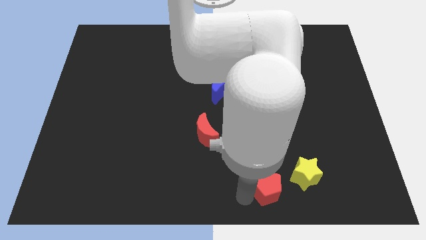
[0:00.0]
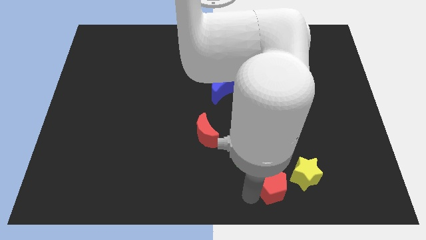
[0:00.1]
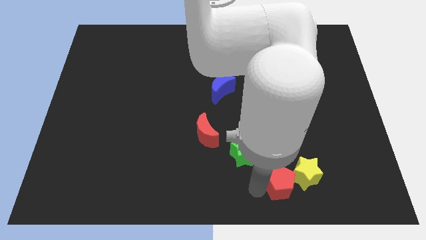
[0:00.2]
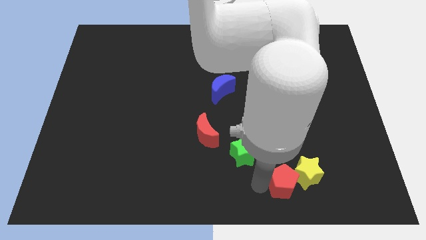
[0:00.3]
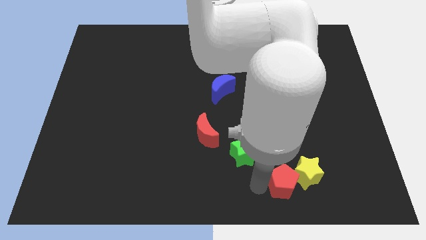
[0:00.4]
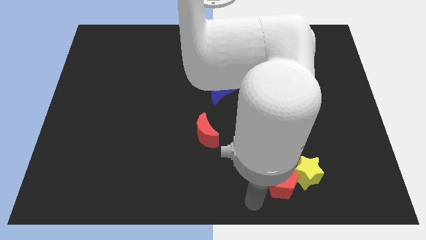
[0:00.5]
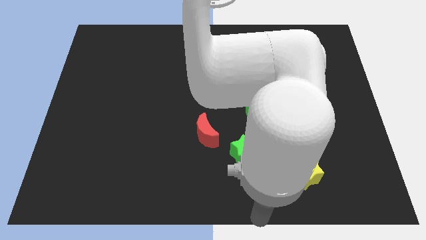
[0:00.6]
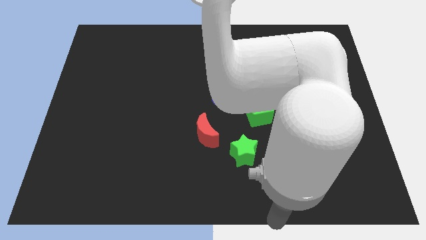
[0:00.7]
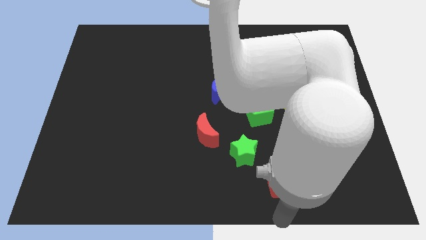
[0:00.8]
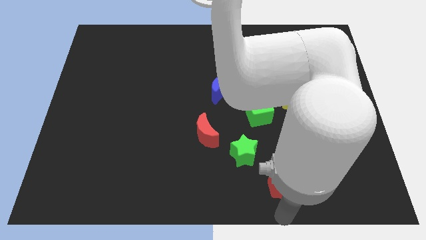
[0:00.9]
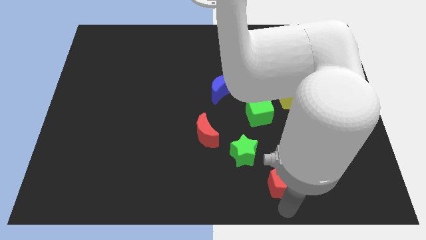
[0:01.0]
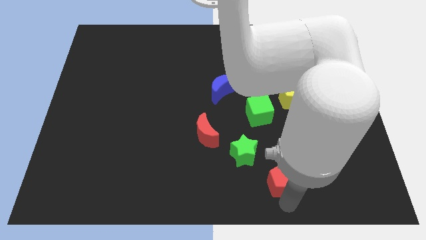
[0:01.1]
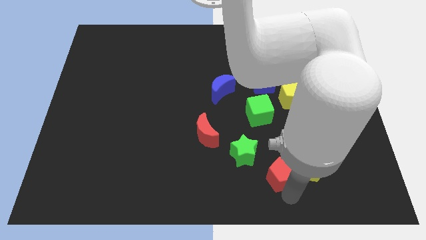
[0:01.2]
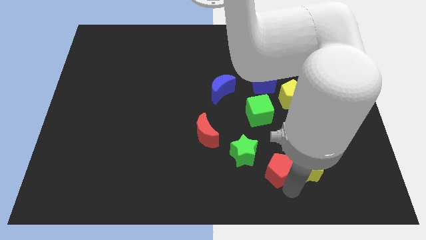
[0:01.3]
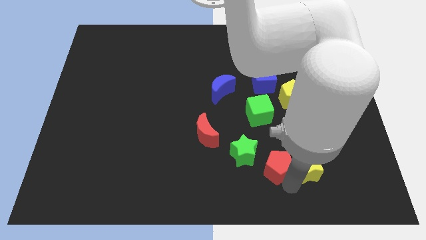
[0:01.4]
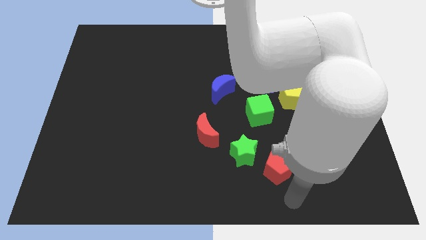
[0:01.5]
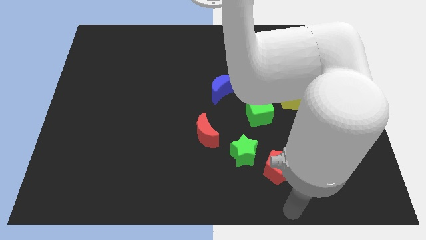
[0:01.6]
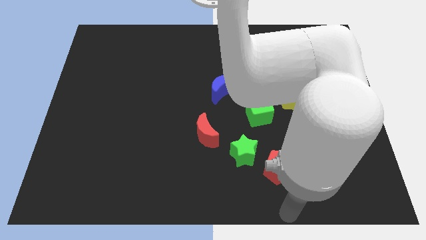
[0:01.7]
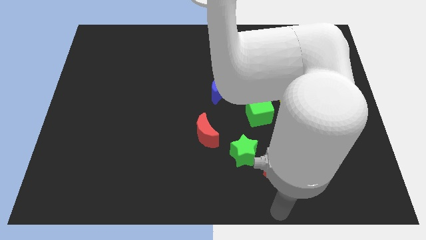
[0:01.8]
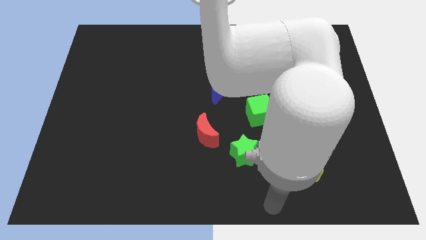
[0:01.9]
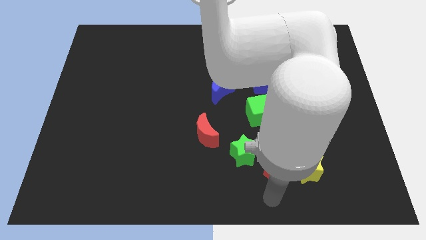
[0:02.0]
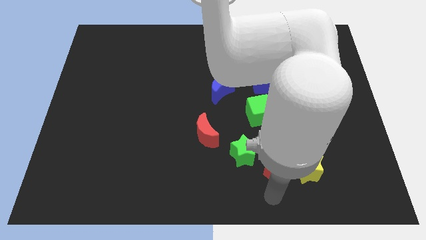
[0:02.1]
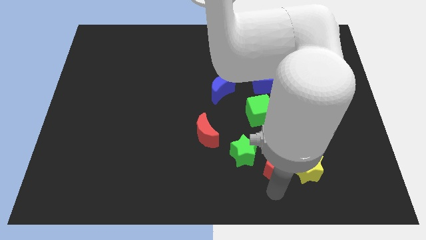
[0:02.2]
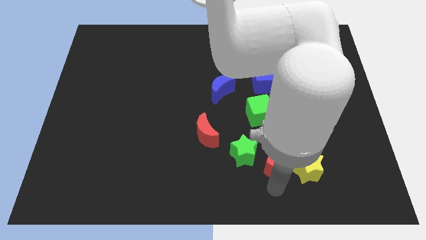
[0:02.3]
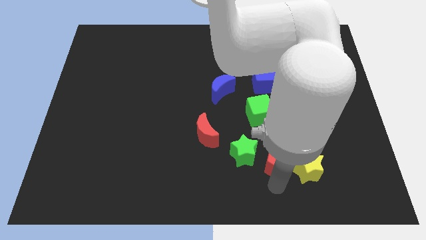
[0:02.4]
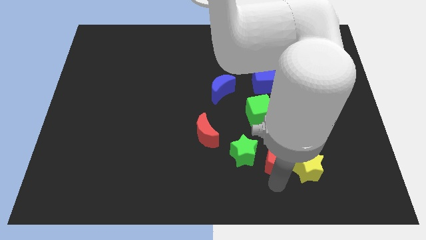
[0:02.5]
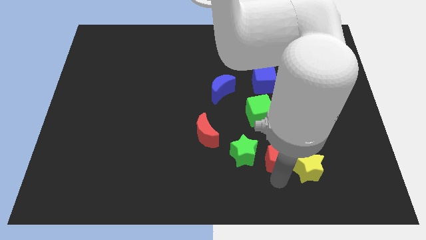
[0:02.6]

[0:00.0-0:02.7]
slide the red pentagon into the yellow star

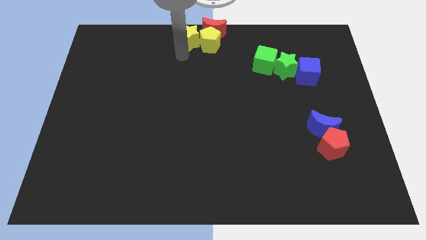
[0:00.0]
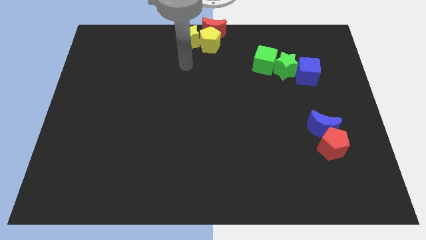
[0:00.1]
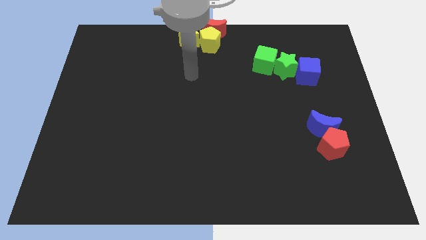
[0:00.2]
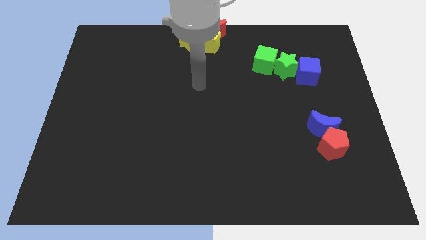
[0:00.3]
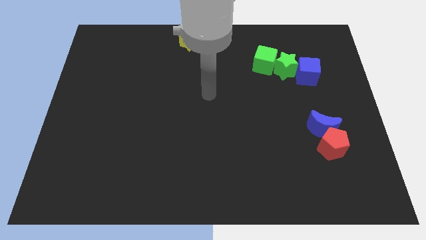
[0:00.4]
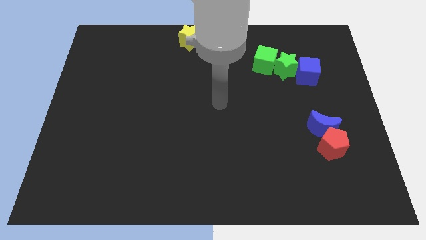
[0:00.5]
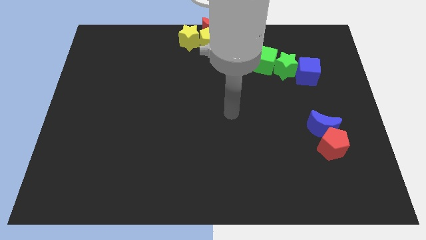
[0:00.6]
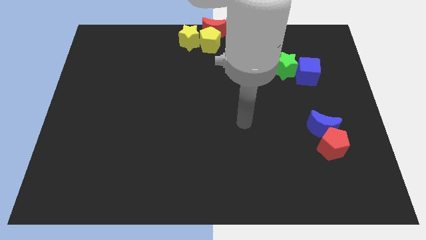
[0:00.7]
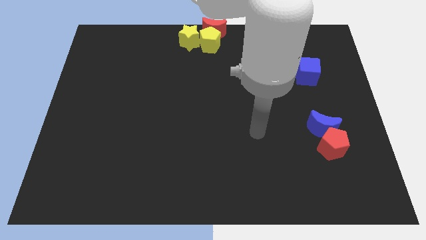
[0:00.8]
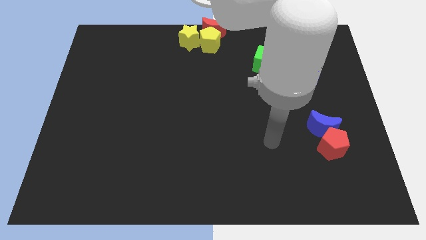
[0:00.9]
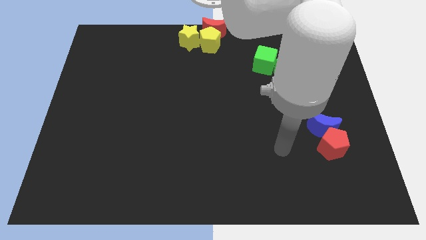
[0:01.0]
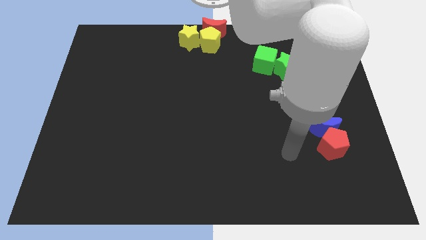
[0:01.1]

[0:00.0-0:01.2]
move your hand towards the bottom right

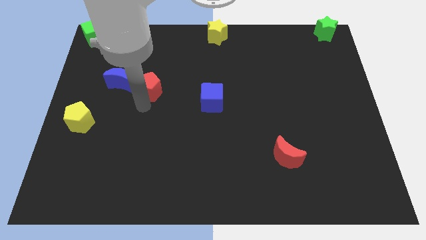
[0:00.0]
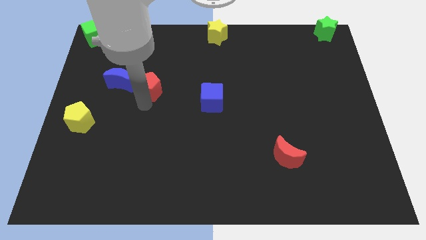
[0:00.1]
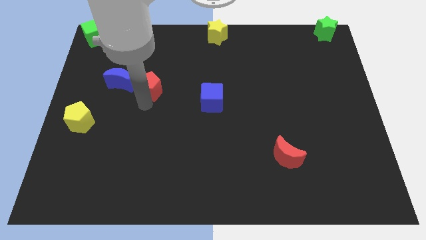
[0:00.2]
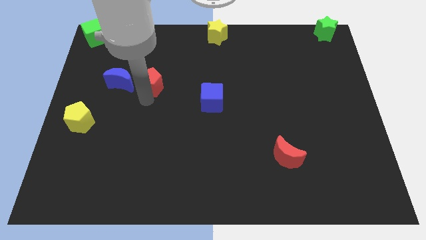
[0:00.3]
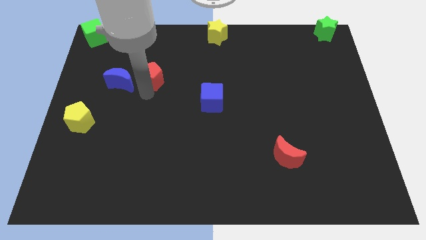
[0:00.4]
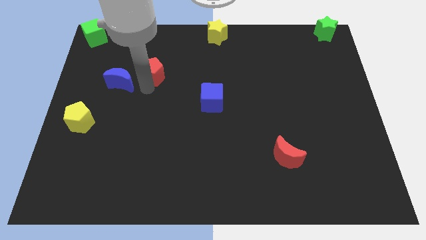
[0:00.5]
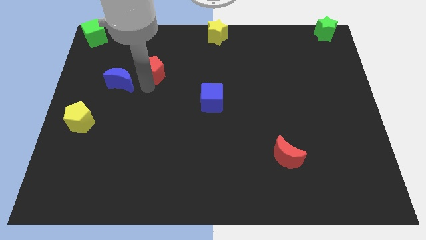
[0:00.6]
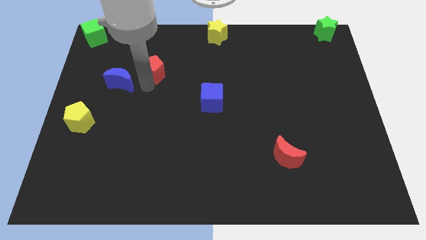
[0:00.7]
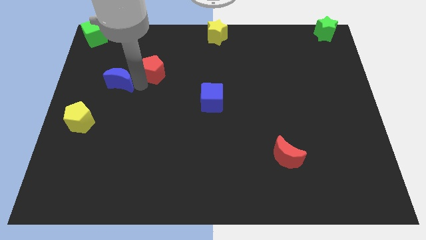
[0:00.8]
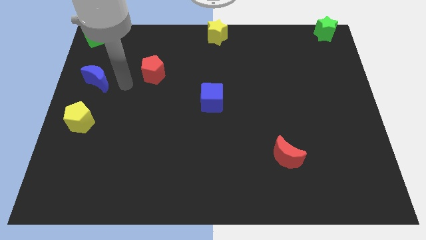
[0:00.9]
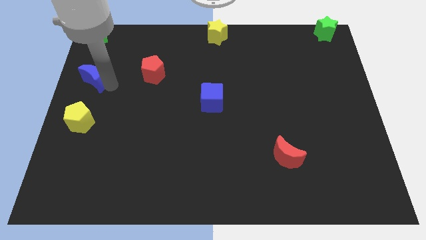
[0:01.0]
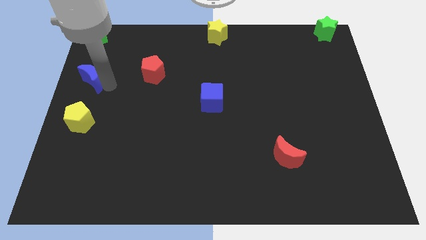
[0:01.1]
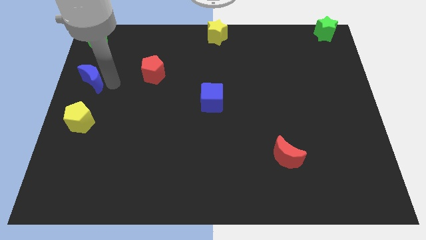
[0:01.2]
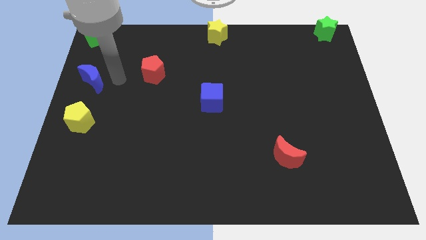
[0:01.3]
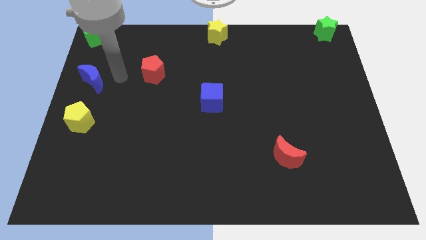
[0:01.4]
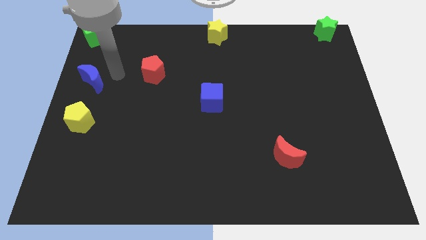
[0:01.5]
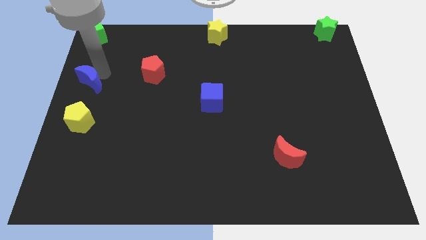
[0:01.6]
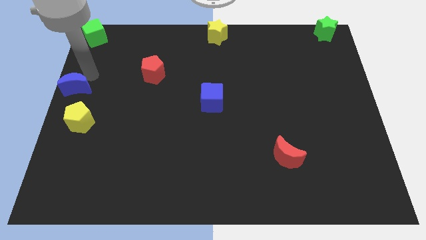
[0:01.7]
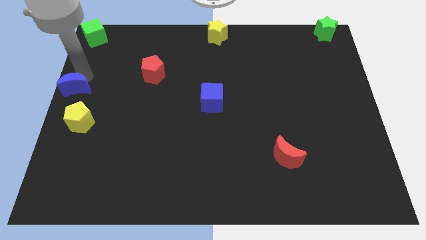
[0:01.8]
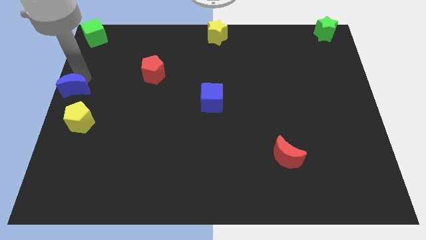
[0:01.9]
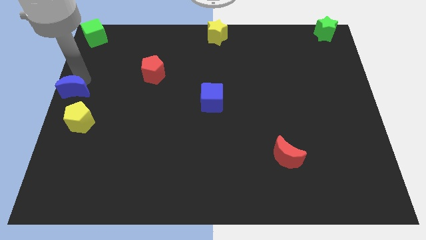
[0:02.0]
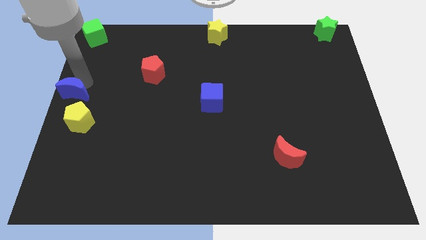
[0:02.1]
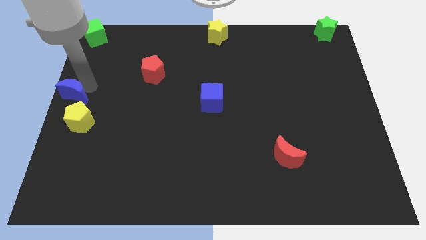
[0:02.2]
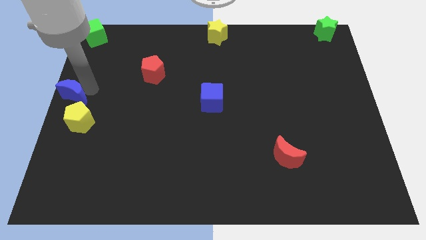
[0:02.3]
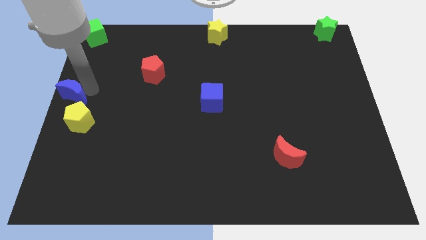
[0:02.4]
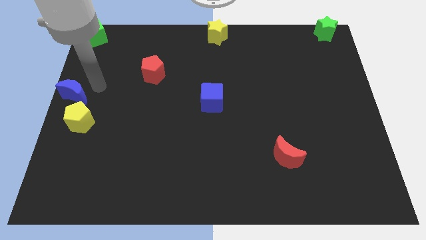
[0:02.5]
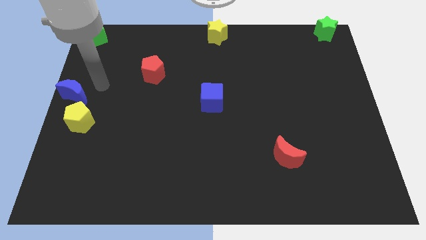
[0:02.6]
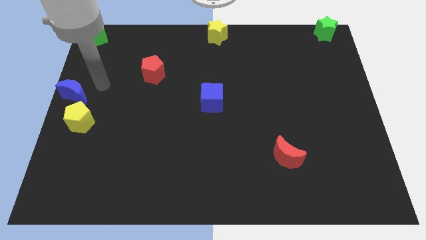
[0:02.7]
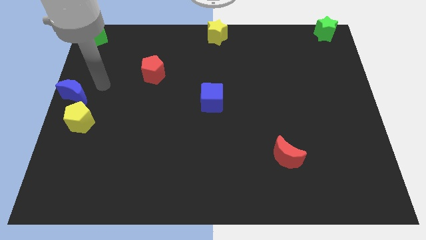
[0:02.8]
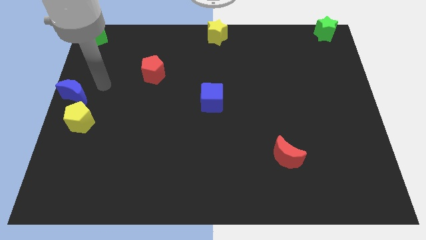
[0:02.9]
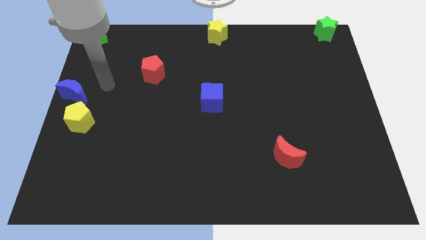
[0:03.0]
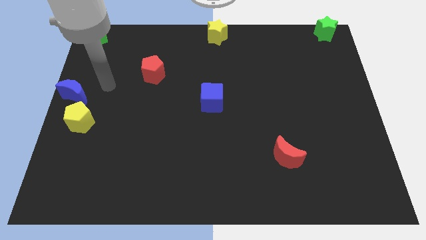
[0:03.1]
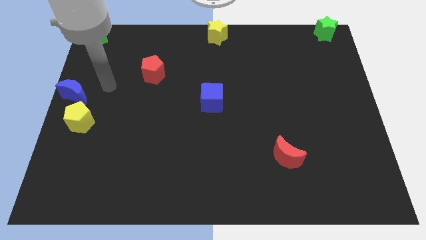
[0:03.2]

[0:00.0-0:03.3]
place the blue moon on top of yellow pentagon

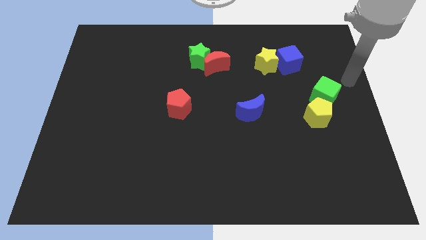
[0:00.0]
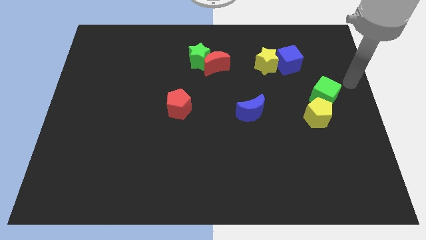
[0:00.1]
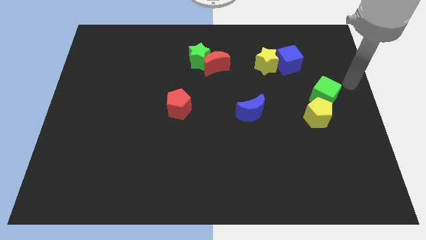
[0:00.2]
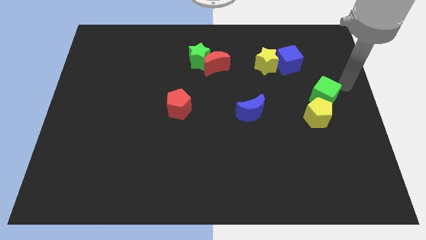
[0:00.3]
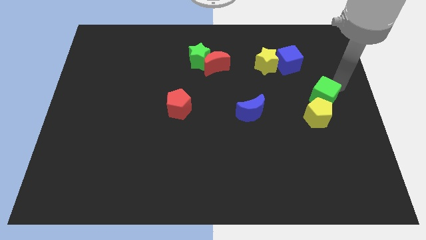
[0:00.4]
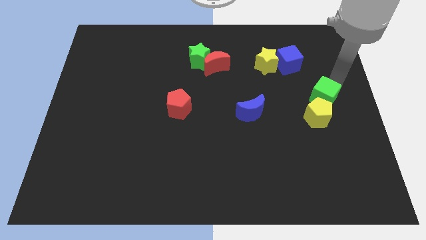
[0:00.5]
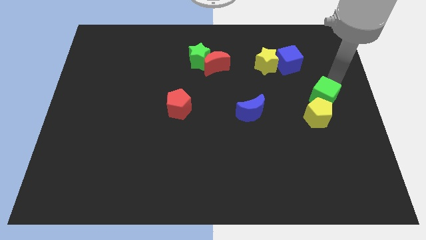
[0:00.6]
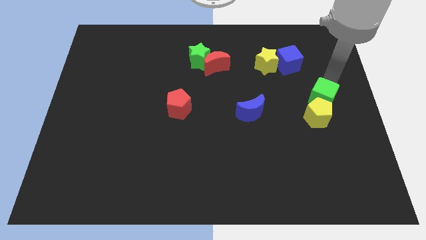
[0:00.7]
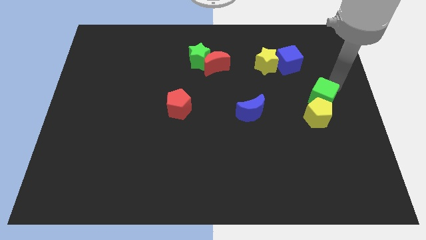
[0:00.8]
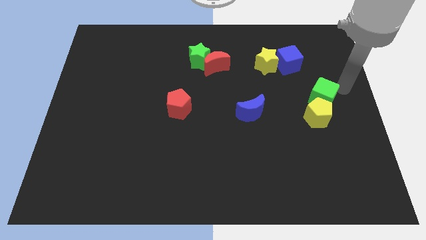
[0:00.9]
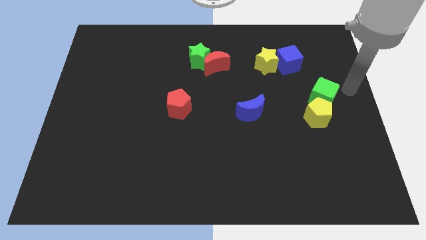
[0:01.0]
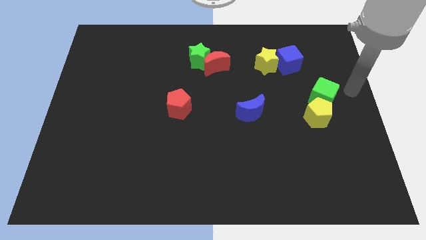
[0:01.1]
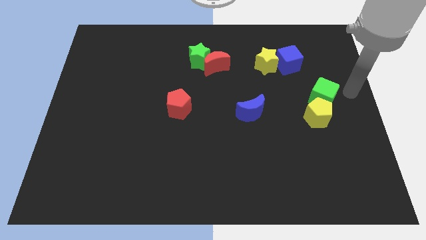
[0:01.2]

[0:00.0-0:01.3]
slightly push green cube towards yellow pentagon

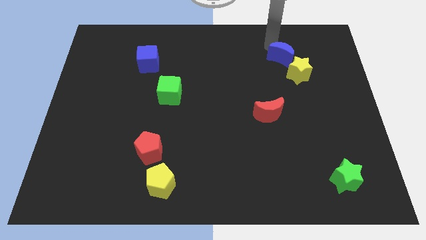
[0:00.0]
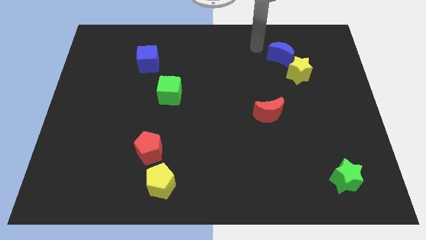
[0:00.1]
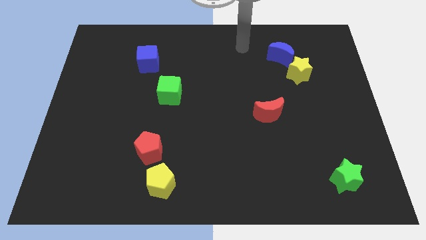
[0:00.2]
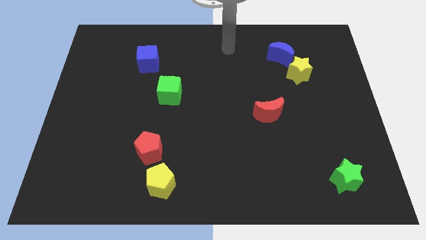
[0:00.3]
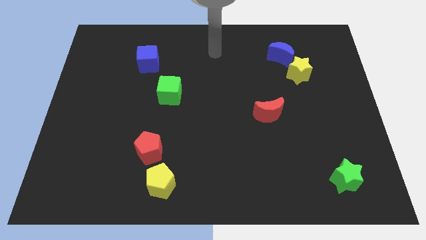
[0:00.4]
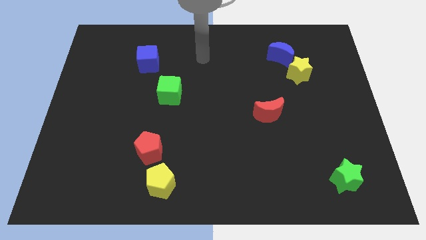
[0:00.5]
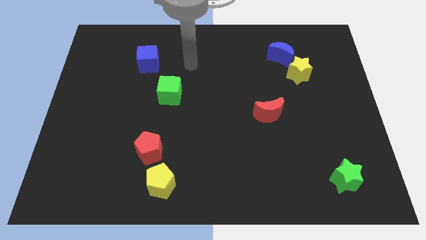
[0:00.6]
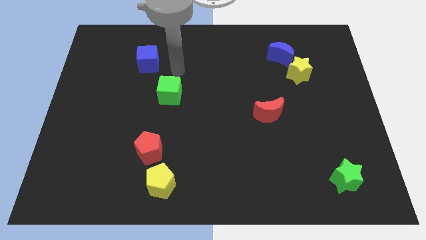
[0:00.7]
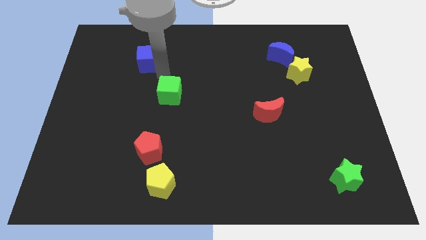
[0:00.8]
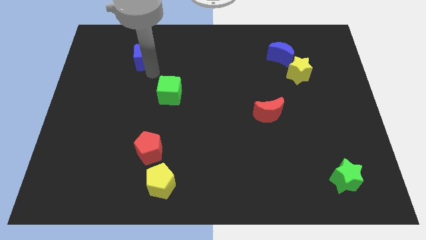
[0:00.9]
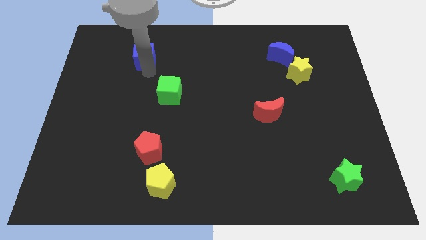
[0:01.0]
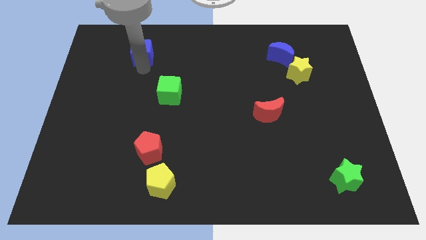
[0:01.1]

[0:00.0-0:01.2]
place the arm below the blue cube
